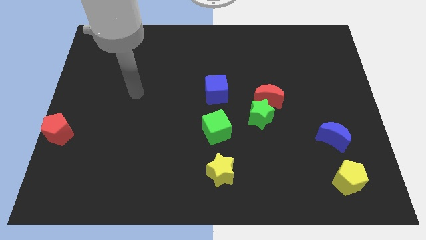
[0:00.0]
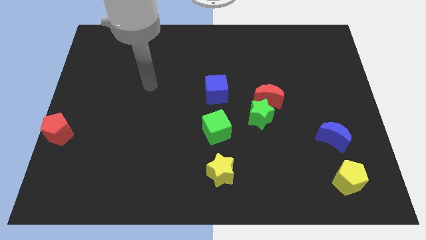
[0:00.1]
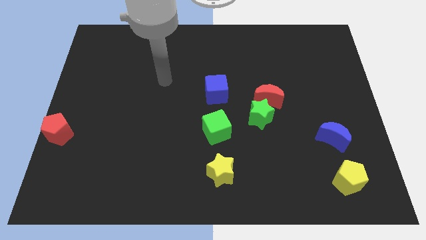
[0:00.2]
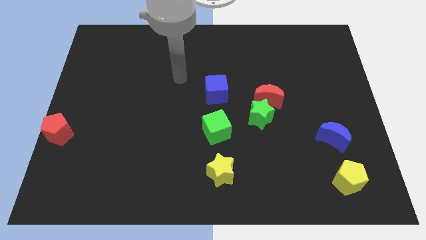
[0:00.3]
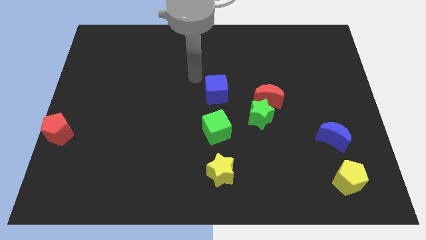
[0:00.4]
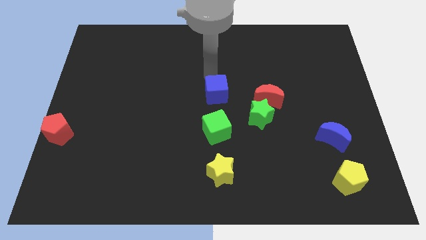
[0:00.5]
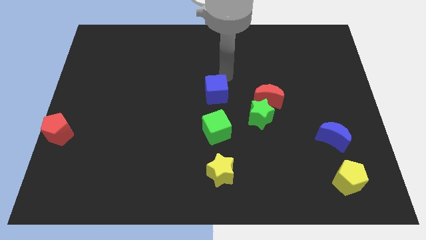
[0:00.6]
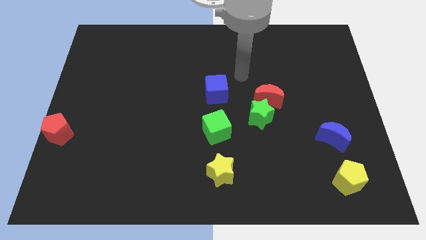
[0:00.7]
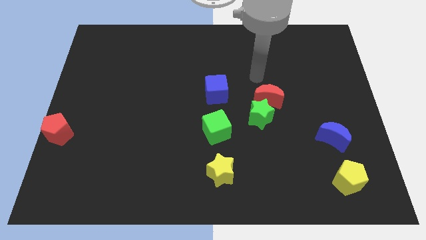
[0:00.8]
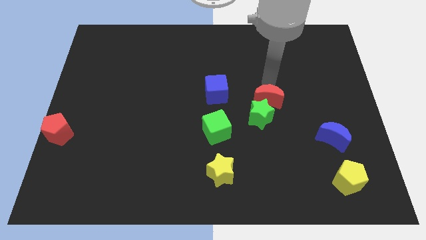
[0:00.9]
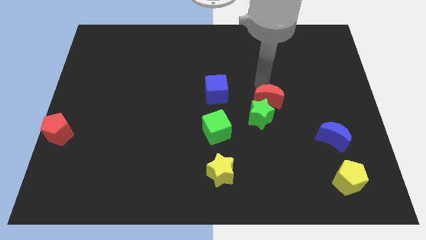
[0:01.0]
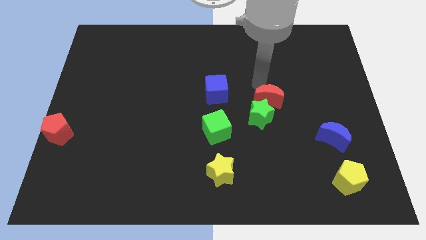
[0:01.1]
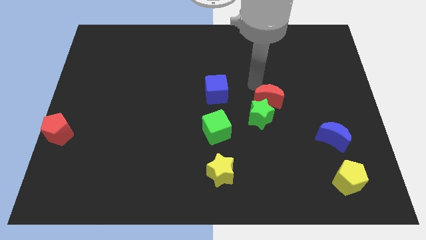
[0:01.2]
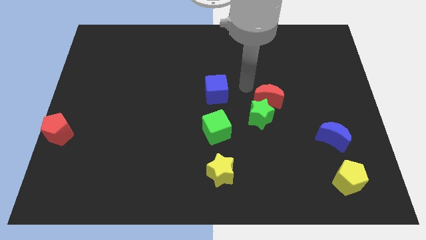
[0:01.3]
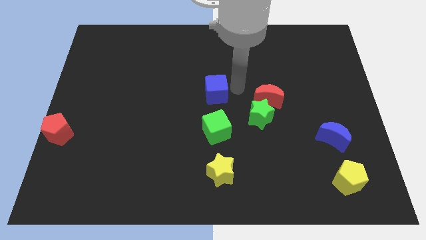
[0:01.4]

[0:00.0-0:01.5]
move the arm towards the right of the blue cube

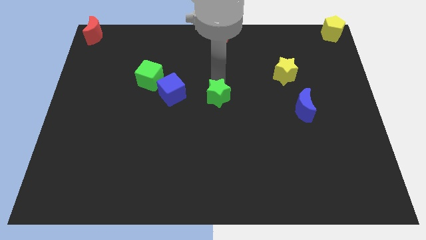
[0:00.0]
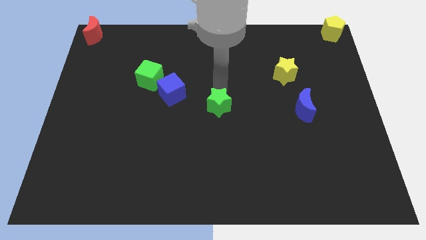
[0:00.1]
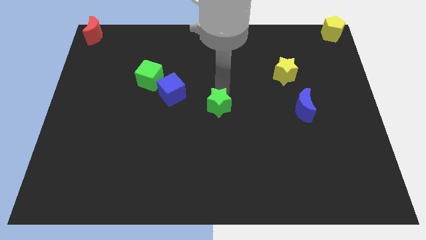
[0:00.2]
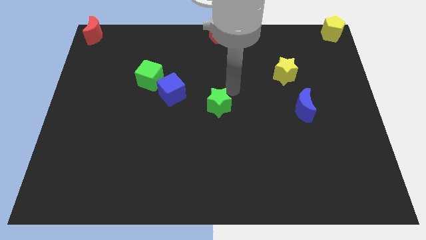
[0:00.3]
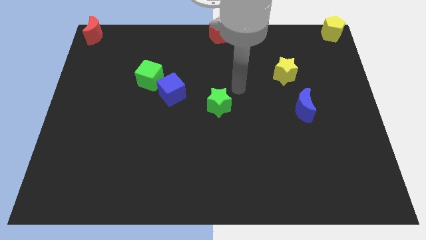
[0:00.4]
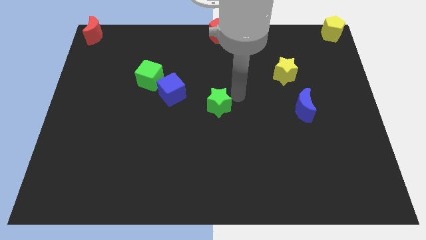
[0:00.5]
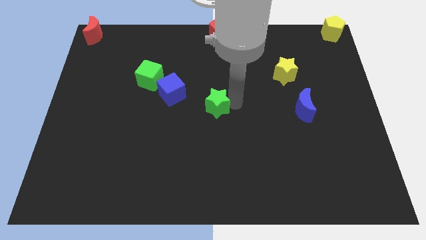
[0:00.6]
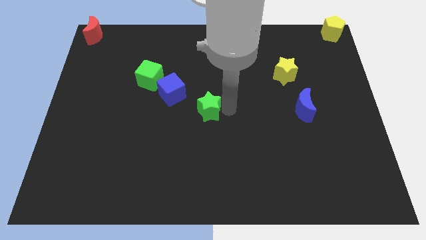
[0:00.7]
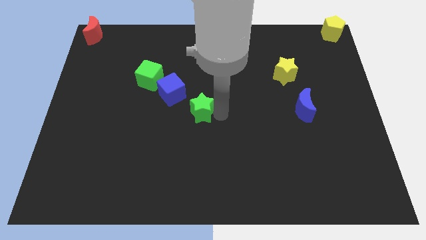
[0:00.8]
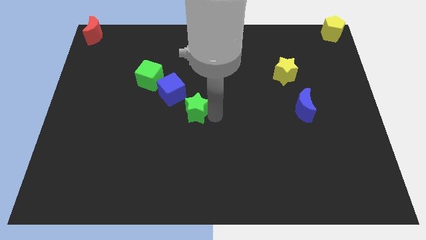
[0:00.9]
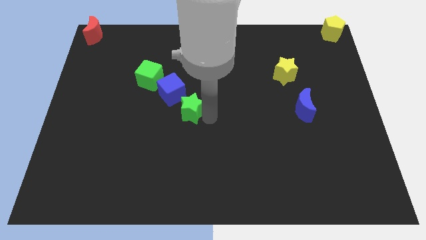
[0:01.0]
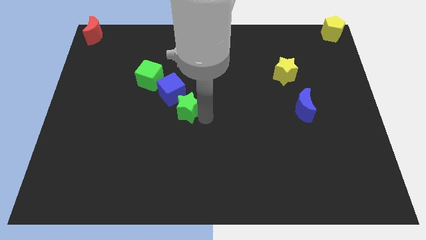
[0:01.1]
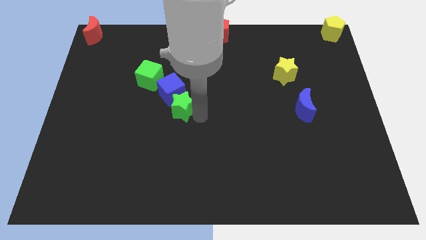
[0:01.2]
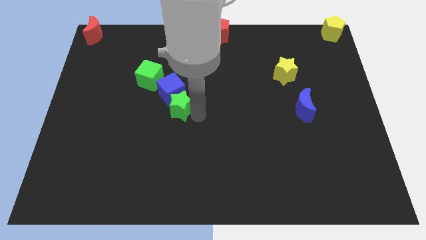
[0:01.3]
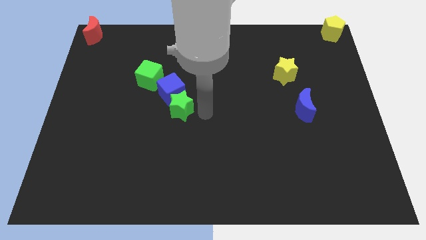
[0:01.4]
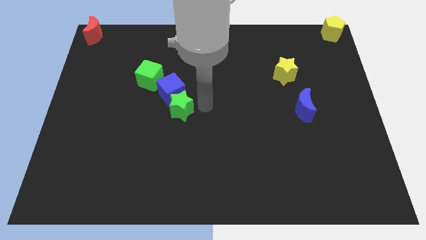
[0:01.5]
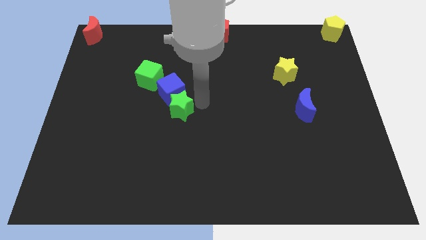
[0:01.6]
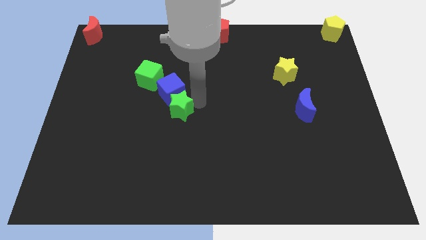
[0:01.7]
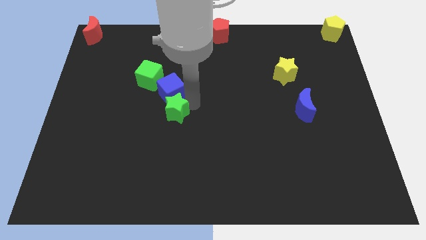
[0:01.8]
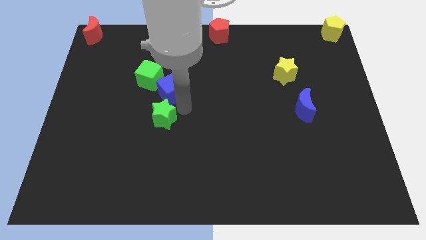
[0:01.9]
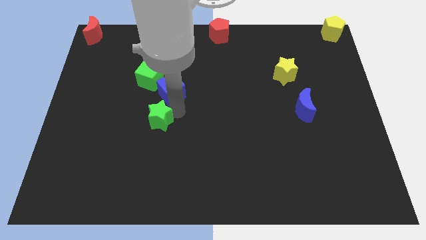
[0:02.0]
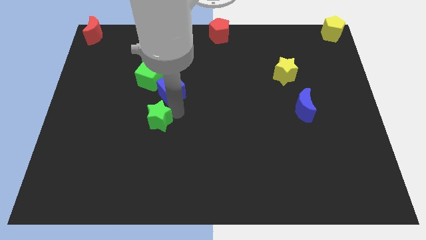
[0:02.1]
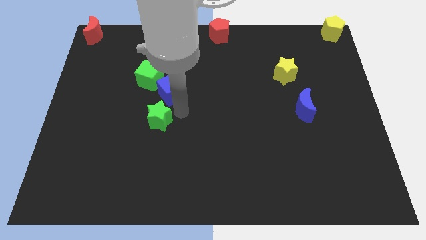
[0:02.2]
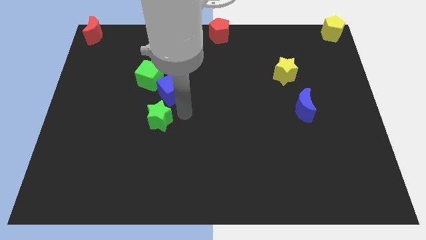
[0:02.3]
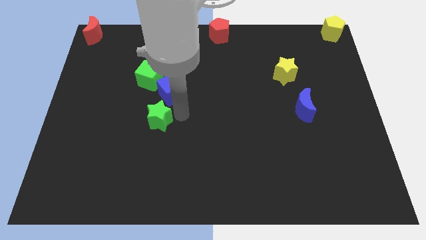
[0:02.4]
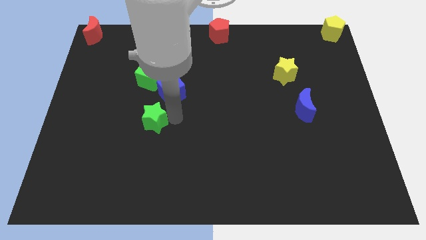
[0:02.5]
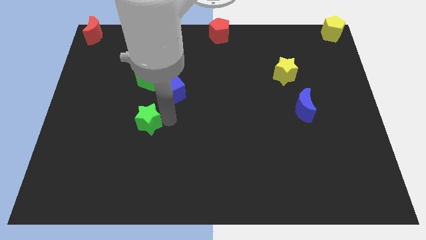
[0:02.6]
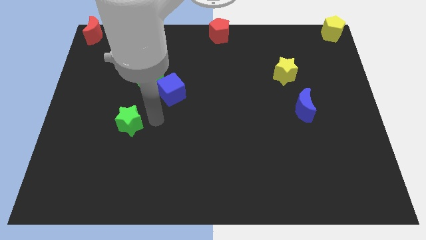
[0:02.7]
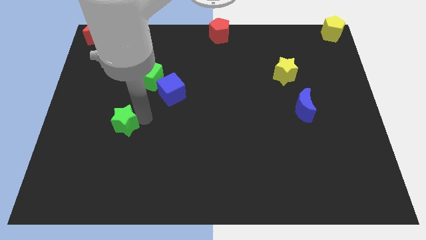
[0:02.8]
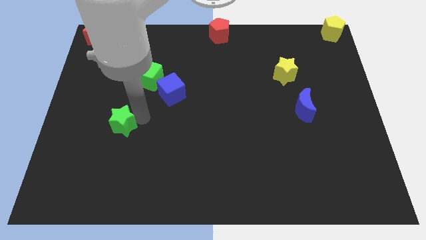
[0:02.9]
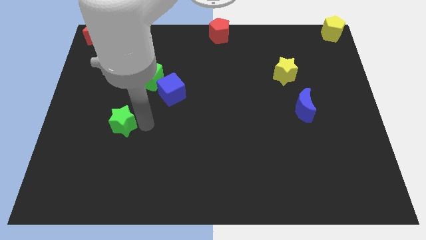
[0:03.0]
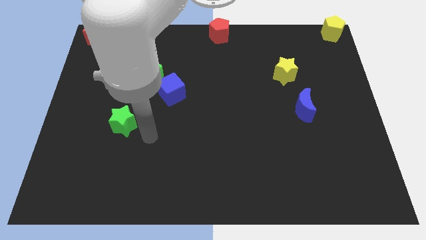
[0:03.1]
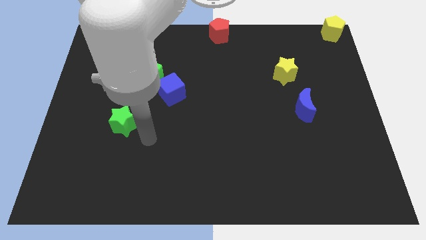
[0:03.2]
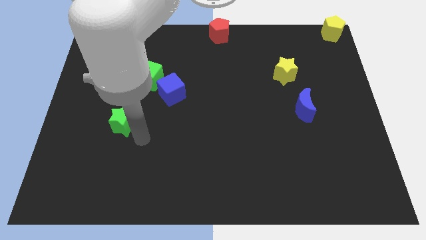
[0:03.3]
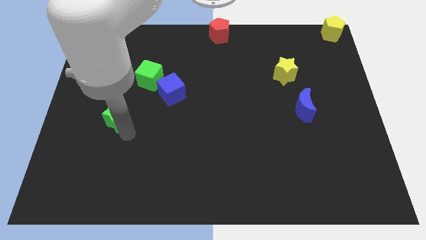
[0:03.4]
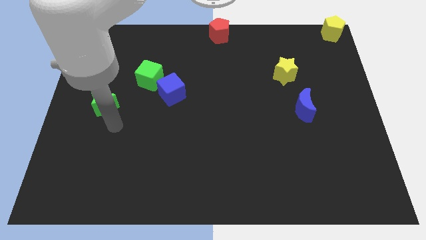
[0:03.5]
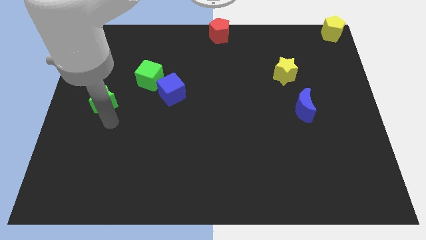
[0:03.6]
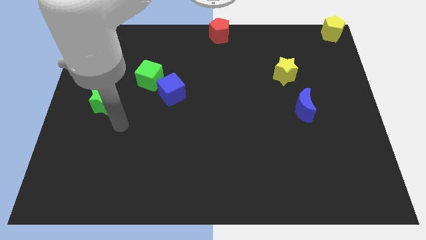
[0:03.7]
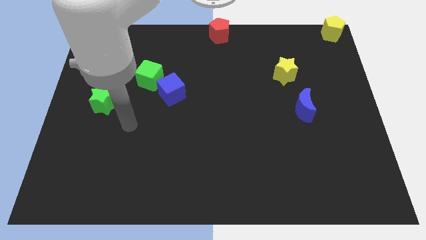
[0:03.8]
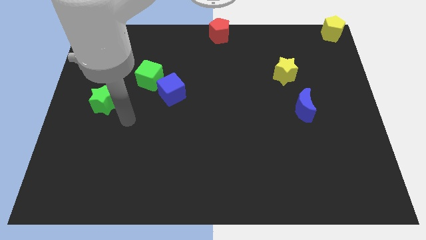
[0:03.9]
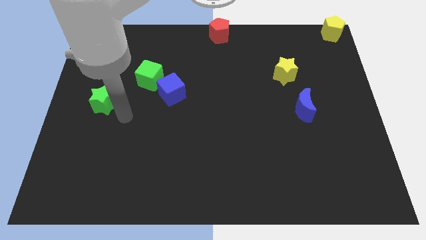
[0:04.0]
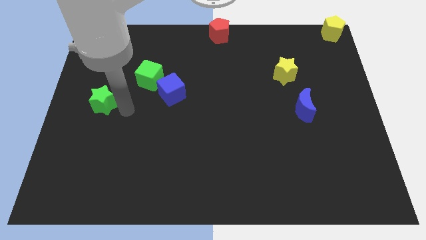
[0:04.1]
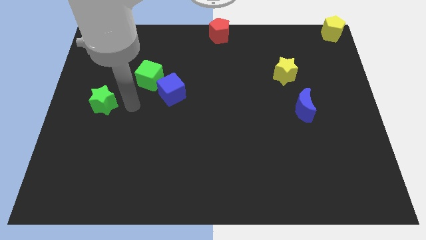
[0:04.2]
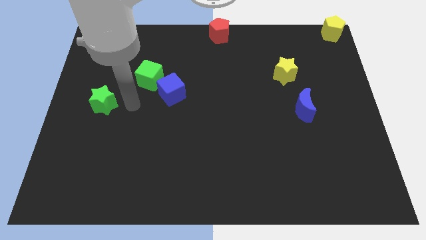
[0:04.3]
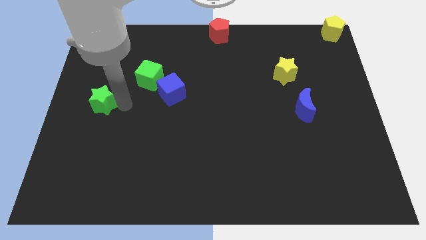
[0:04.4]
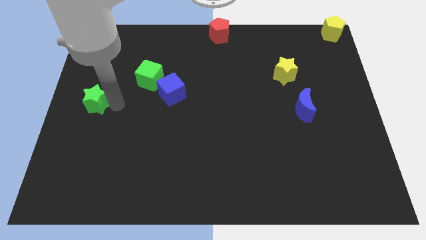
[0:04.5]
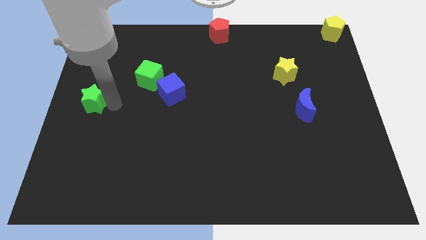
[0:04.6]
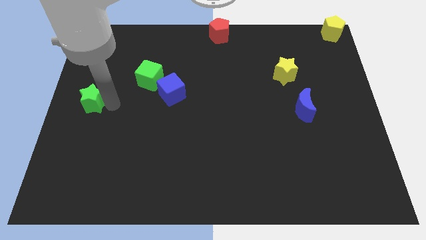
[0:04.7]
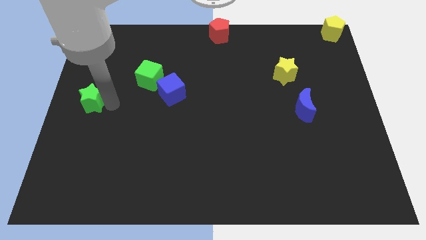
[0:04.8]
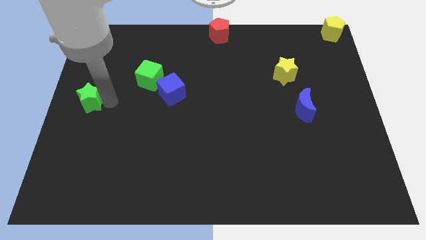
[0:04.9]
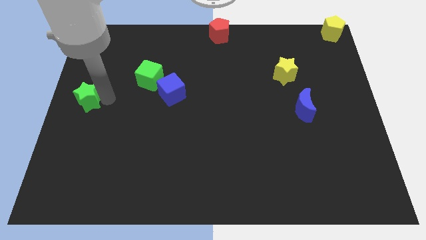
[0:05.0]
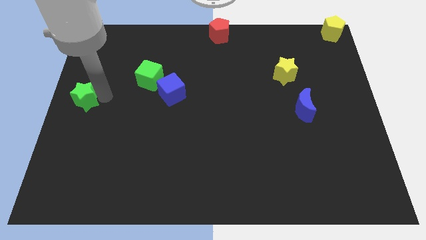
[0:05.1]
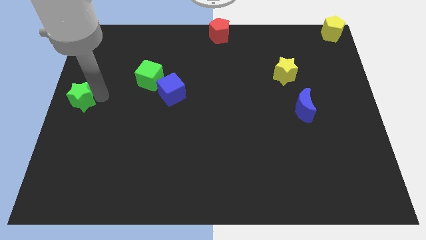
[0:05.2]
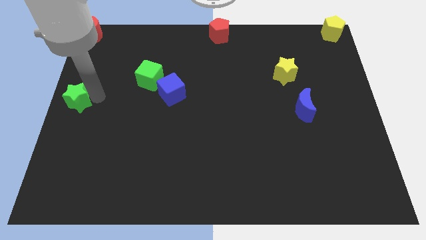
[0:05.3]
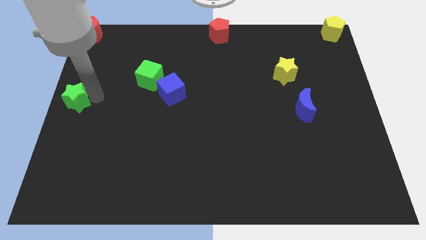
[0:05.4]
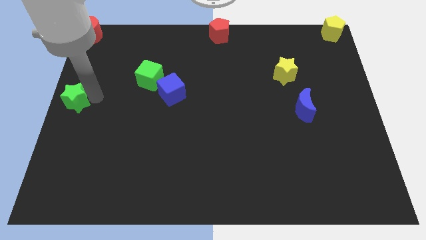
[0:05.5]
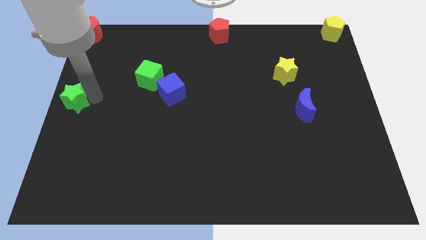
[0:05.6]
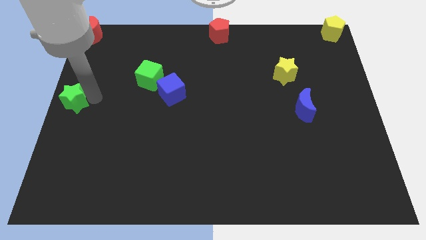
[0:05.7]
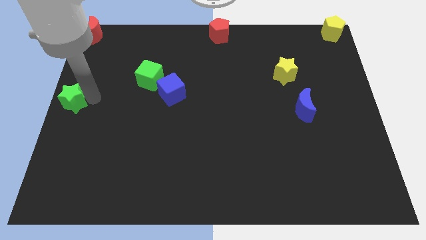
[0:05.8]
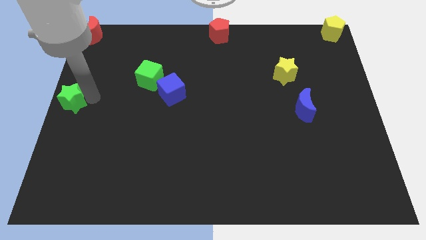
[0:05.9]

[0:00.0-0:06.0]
move the green star towards the center left of the board

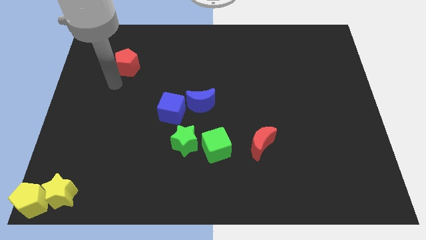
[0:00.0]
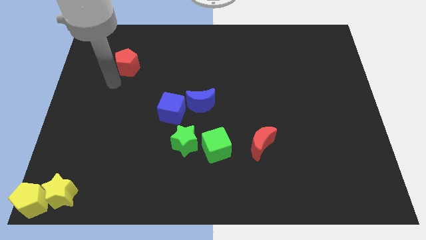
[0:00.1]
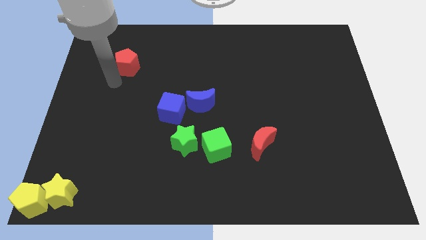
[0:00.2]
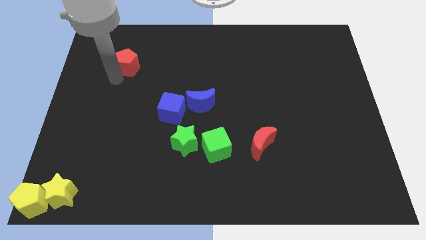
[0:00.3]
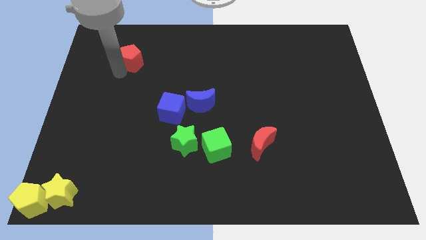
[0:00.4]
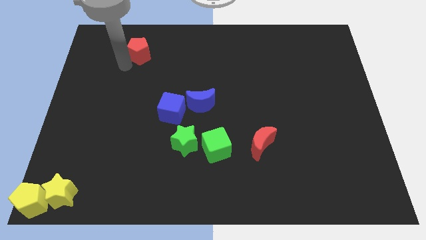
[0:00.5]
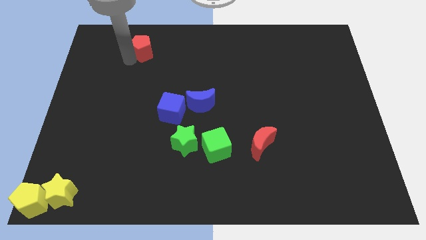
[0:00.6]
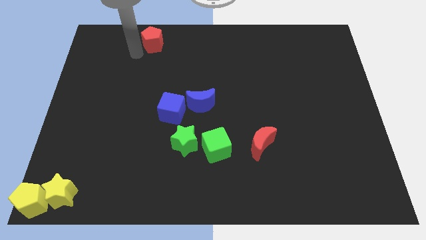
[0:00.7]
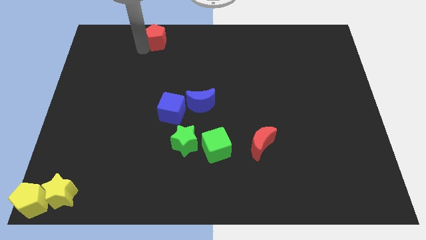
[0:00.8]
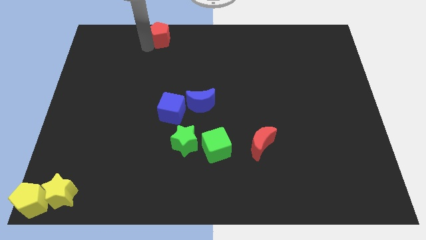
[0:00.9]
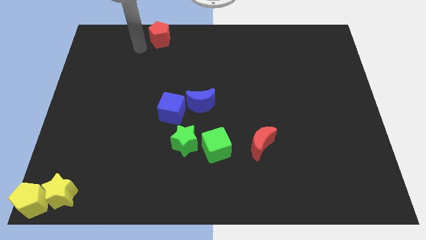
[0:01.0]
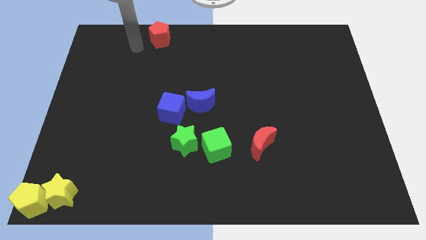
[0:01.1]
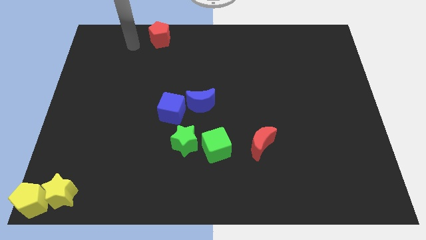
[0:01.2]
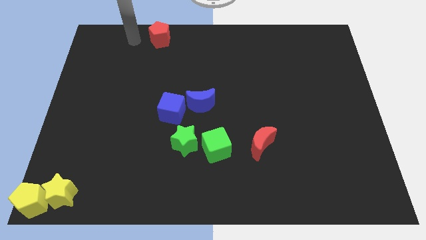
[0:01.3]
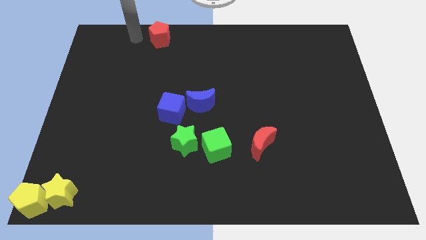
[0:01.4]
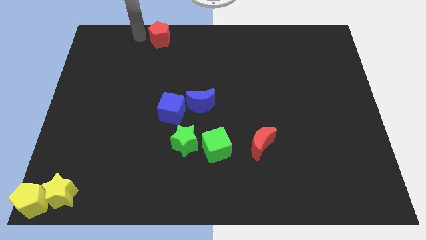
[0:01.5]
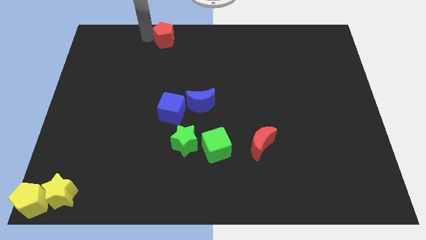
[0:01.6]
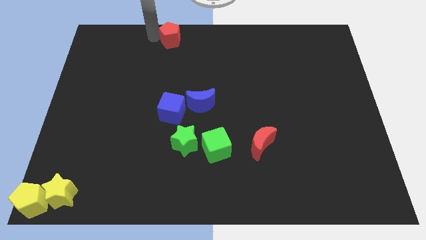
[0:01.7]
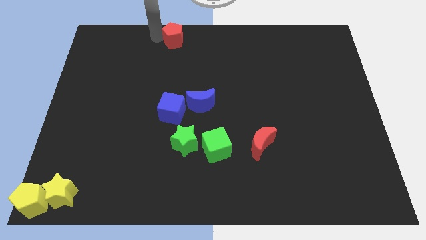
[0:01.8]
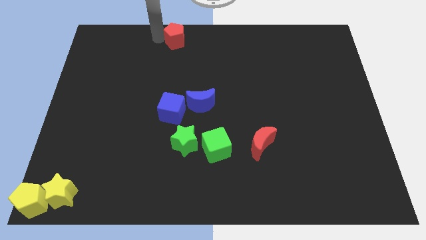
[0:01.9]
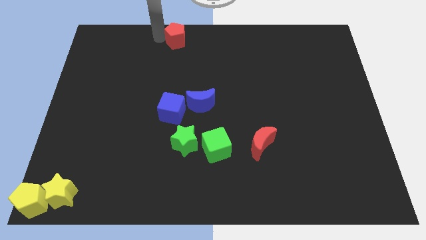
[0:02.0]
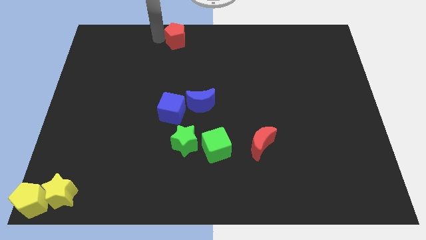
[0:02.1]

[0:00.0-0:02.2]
move the red pentagon slightly towards the top center of the board
